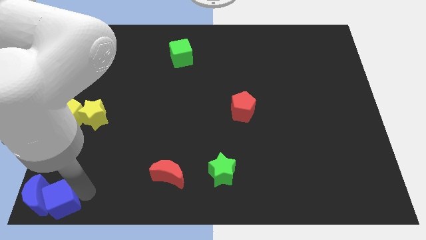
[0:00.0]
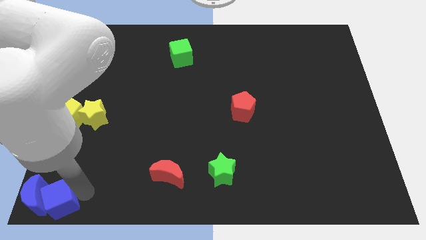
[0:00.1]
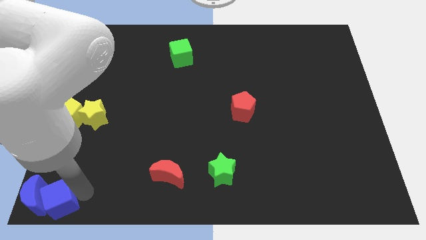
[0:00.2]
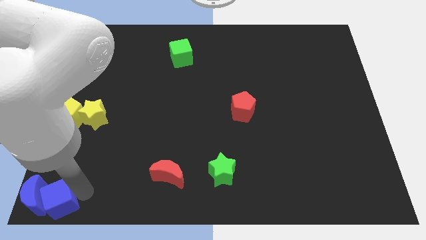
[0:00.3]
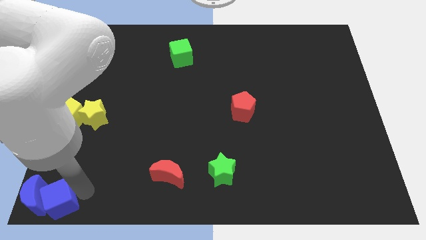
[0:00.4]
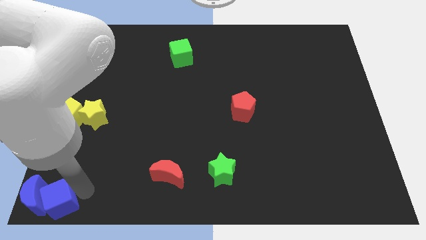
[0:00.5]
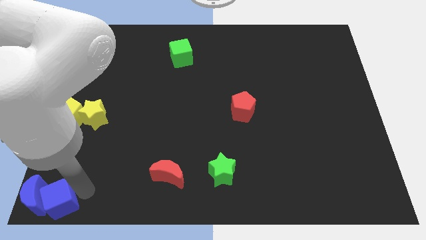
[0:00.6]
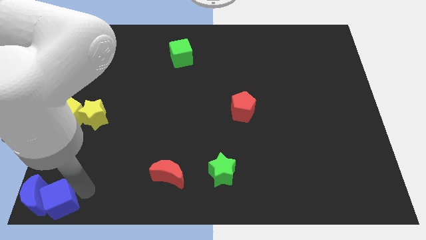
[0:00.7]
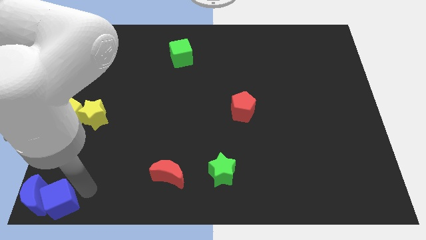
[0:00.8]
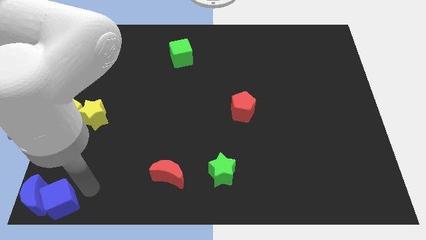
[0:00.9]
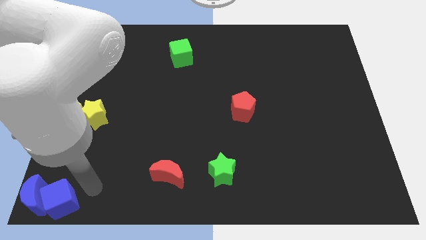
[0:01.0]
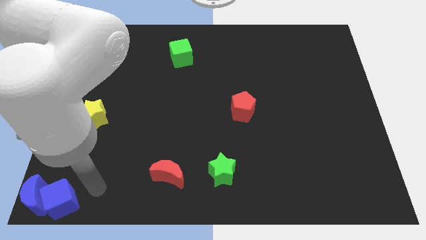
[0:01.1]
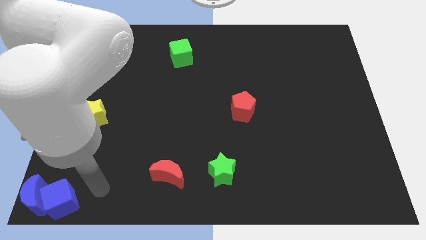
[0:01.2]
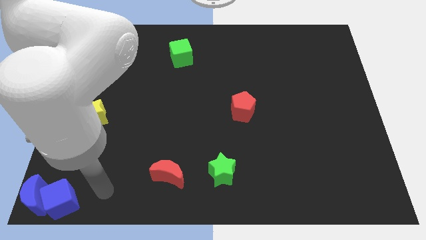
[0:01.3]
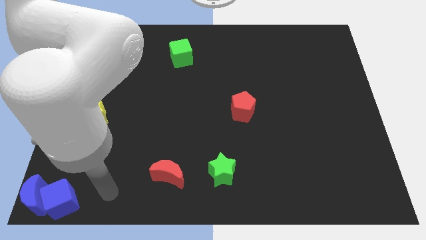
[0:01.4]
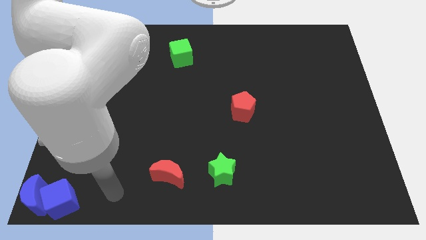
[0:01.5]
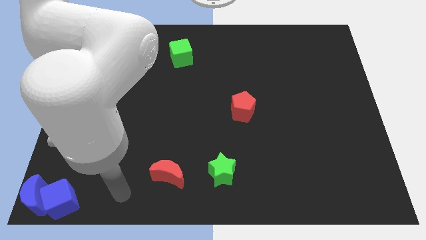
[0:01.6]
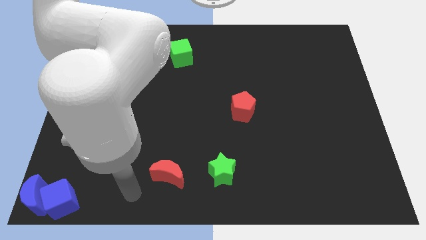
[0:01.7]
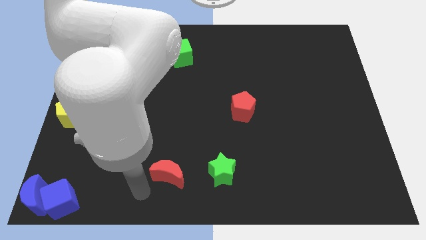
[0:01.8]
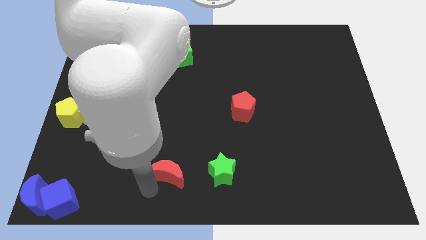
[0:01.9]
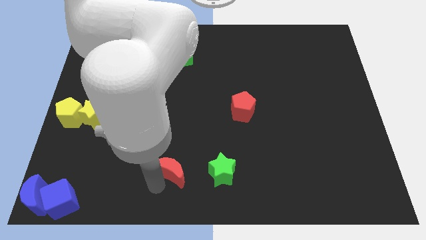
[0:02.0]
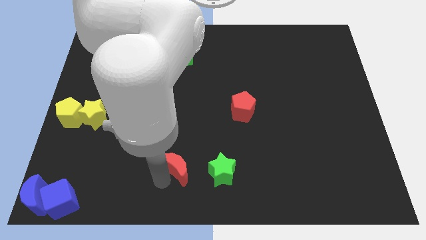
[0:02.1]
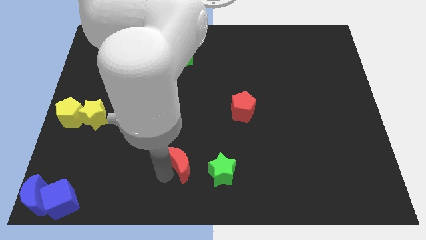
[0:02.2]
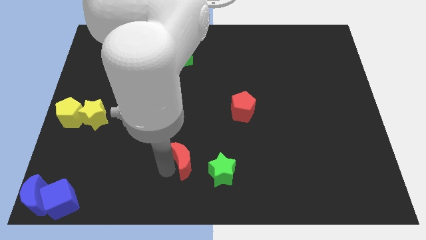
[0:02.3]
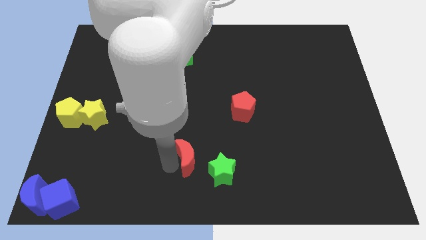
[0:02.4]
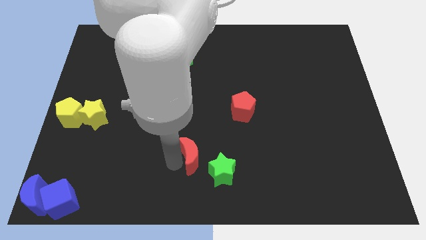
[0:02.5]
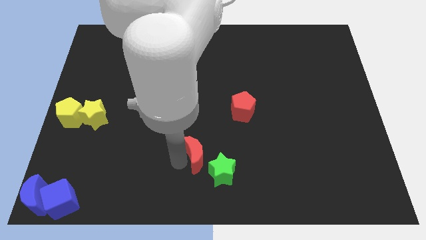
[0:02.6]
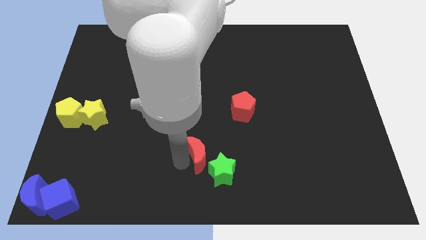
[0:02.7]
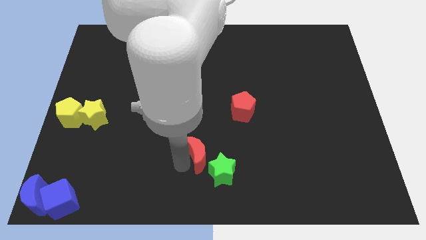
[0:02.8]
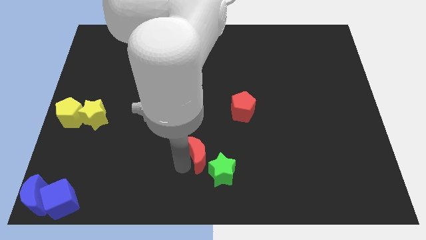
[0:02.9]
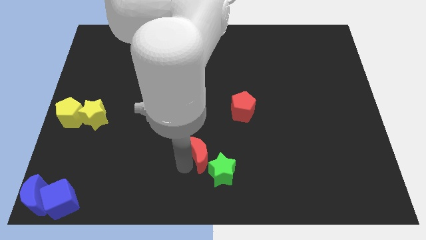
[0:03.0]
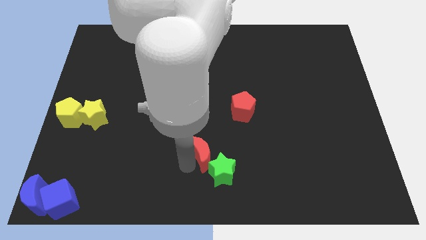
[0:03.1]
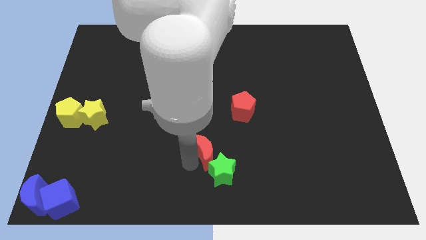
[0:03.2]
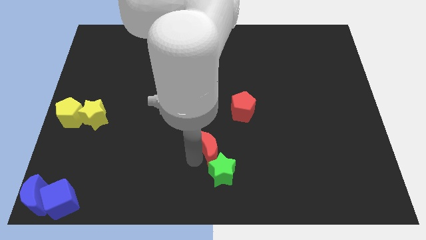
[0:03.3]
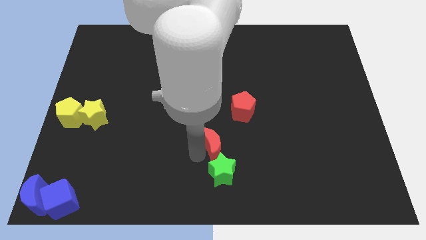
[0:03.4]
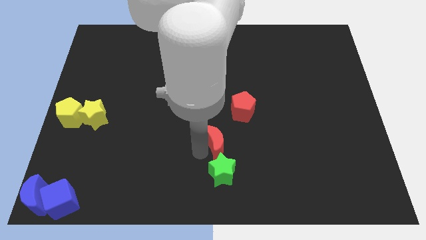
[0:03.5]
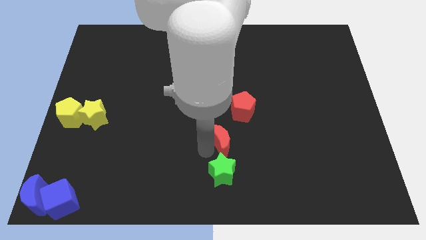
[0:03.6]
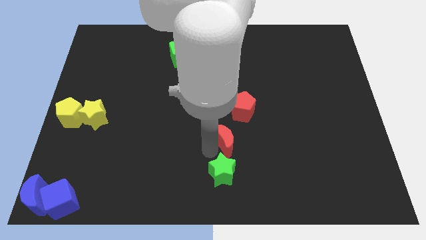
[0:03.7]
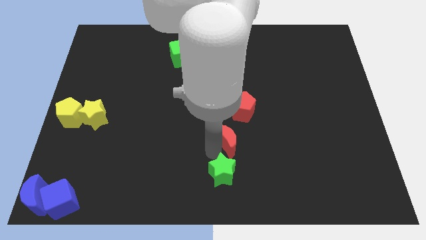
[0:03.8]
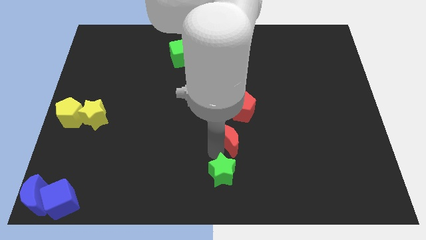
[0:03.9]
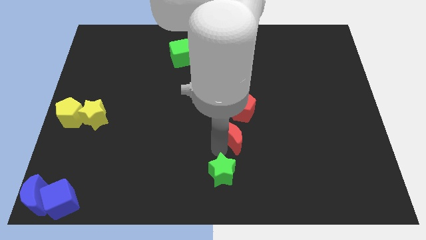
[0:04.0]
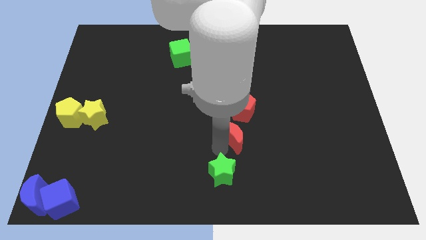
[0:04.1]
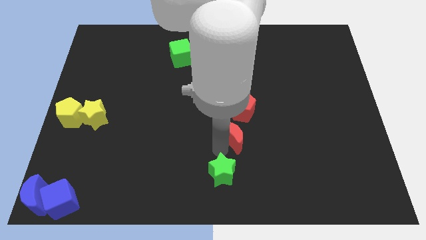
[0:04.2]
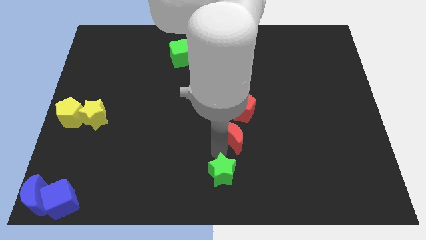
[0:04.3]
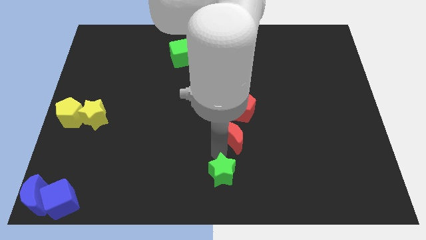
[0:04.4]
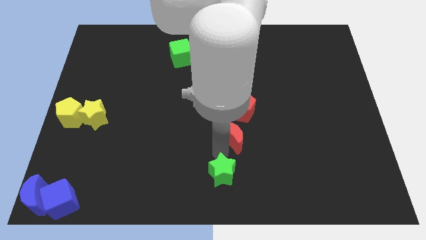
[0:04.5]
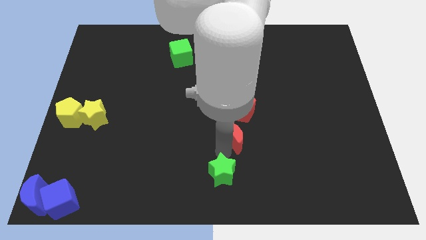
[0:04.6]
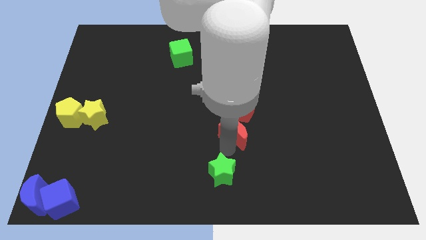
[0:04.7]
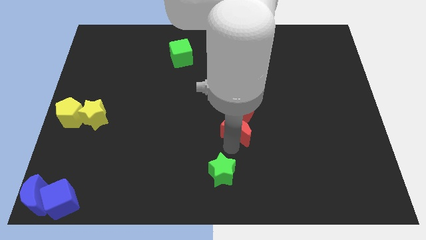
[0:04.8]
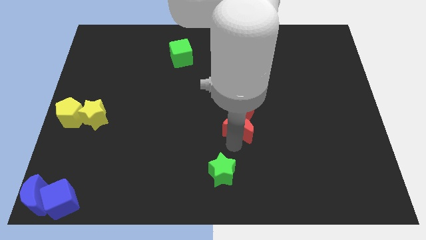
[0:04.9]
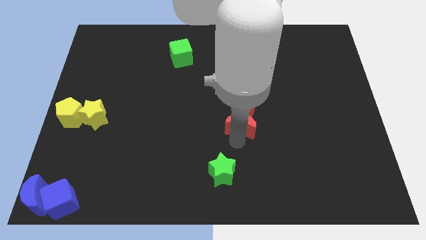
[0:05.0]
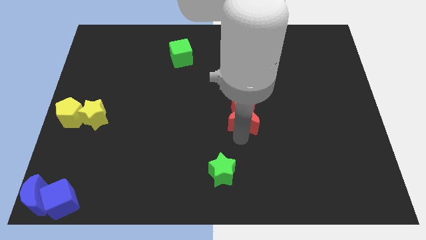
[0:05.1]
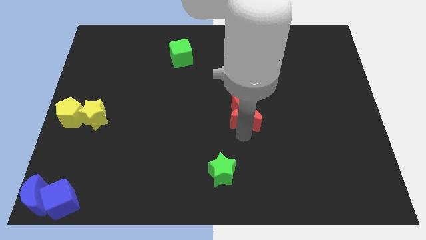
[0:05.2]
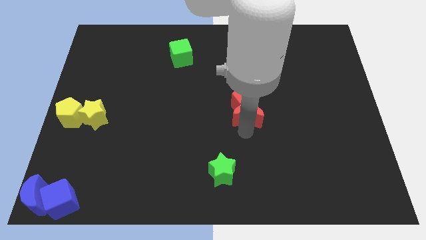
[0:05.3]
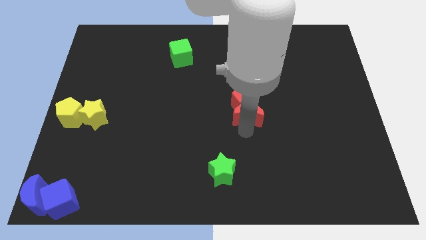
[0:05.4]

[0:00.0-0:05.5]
push the red moon into the bottom of red pentagon

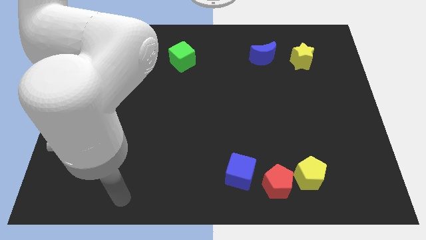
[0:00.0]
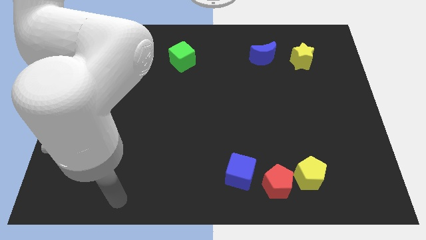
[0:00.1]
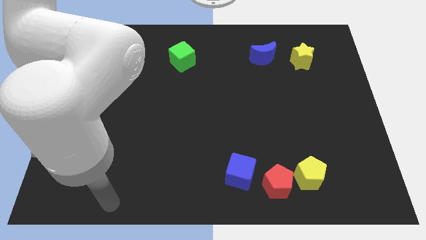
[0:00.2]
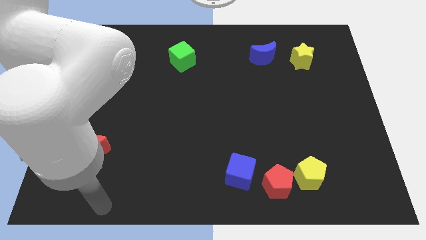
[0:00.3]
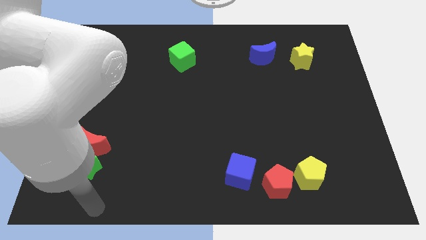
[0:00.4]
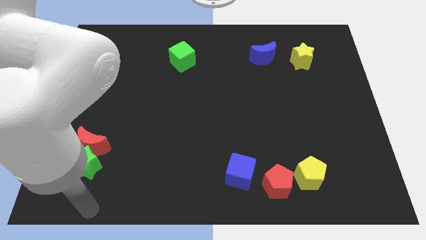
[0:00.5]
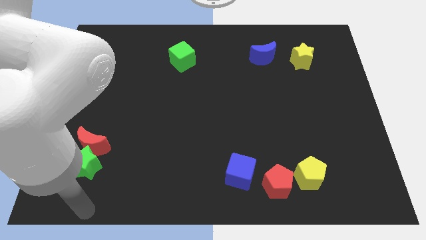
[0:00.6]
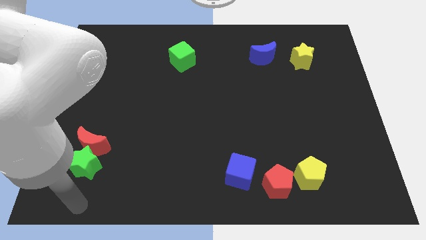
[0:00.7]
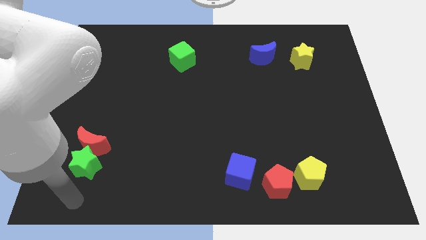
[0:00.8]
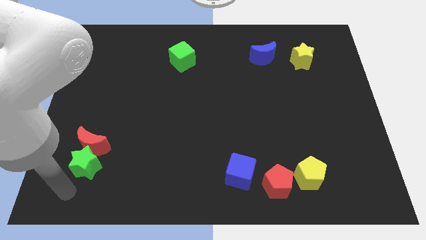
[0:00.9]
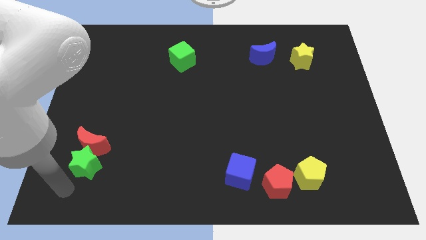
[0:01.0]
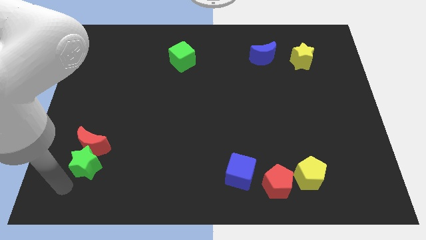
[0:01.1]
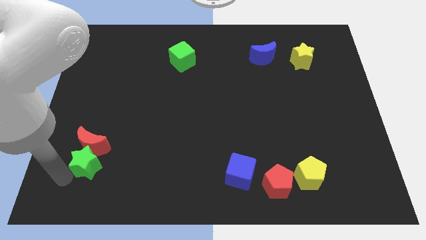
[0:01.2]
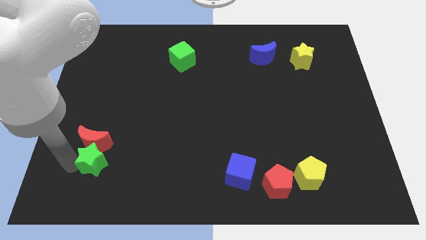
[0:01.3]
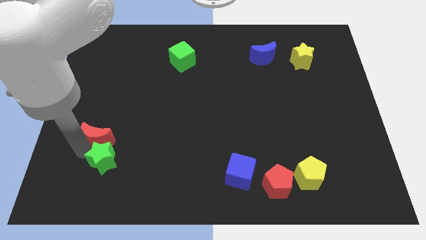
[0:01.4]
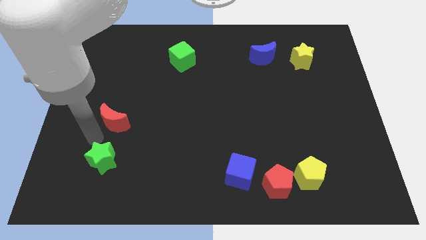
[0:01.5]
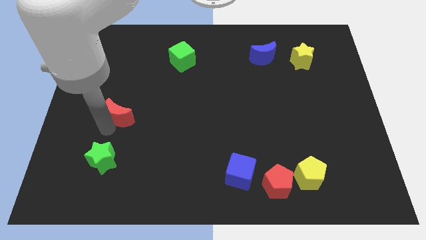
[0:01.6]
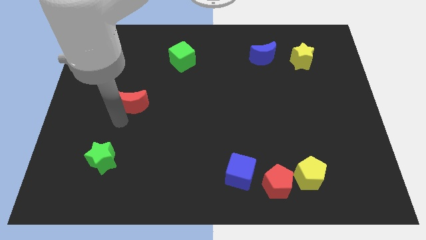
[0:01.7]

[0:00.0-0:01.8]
separate red moon from the green star

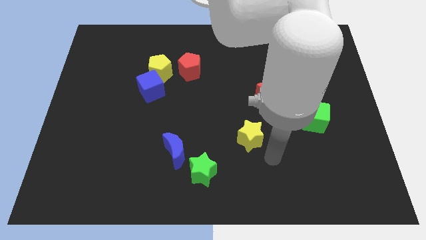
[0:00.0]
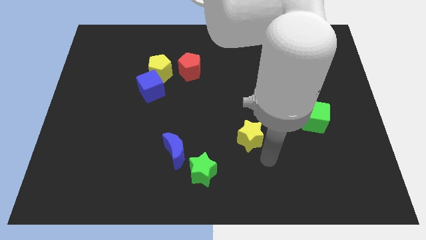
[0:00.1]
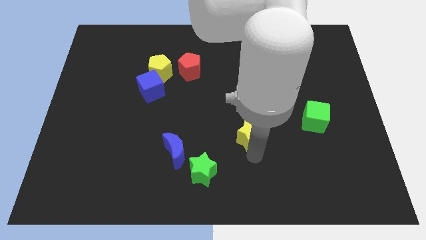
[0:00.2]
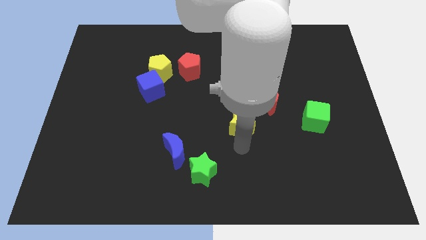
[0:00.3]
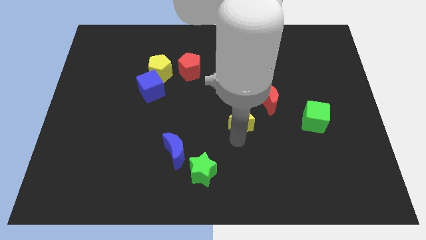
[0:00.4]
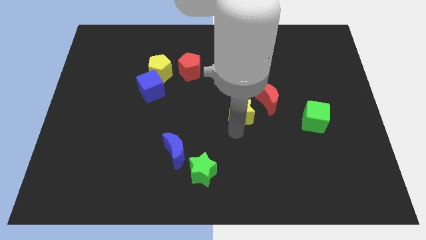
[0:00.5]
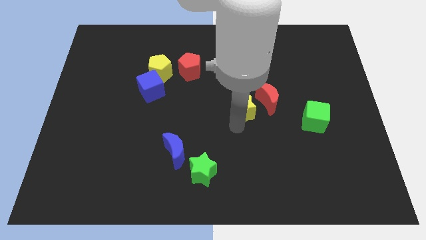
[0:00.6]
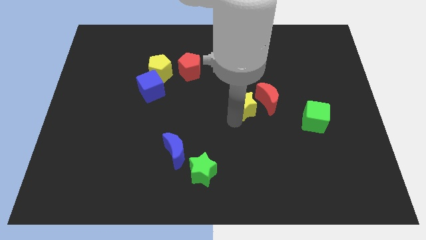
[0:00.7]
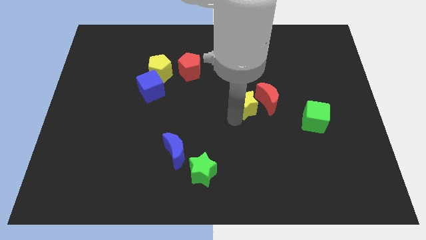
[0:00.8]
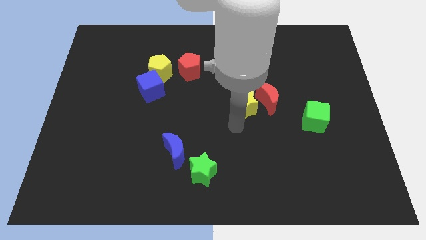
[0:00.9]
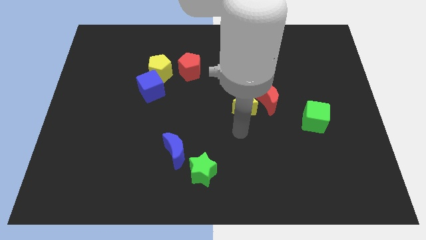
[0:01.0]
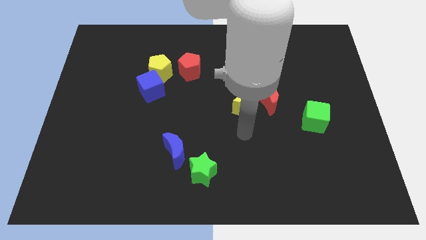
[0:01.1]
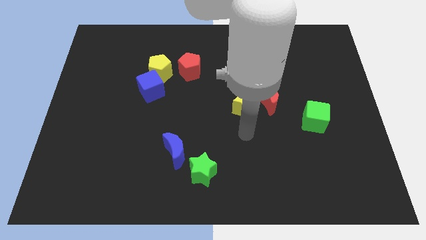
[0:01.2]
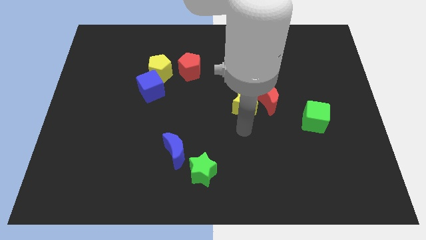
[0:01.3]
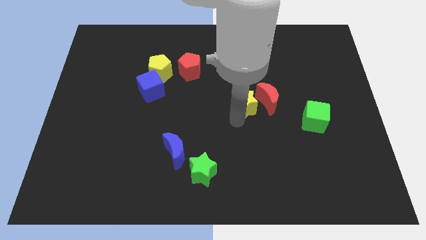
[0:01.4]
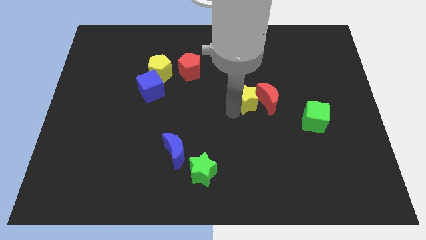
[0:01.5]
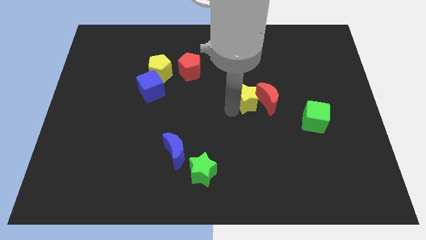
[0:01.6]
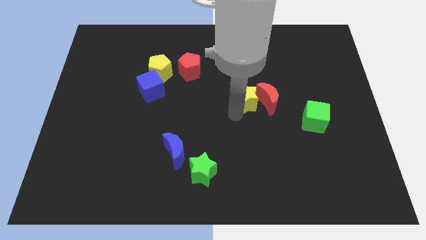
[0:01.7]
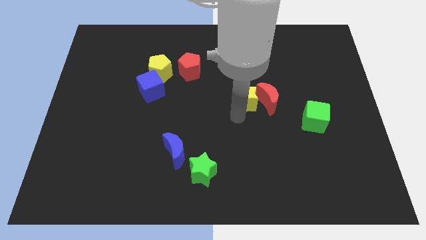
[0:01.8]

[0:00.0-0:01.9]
place the yellow star into the red crescent
